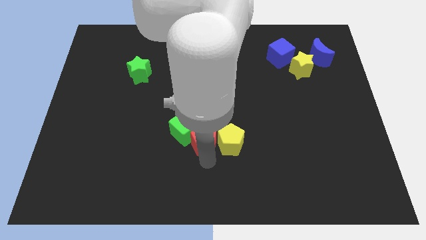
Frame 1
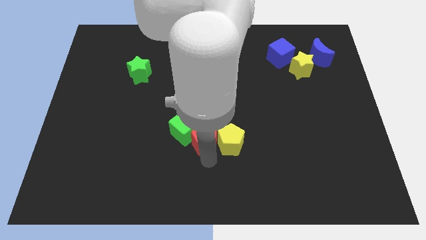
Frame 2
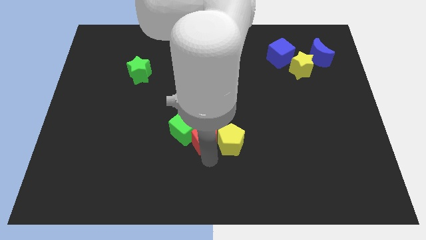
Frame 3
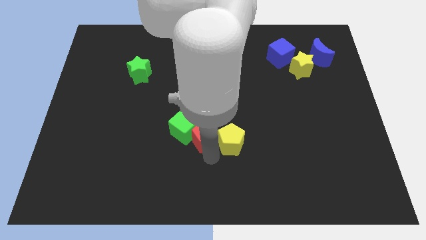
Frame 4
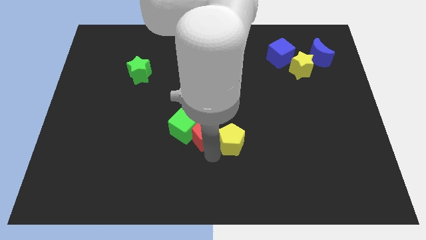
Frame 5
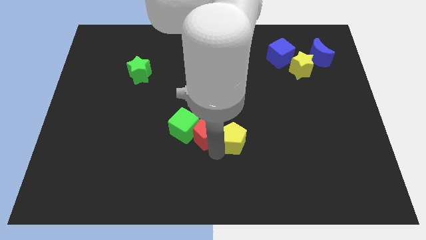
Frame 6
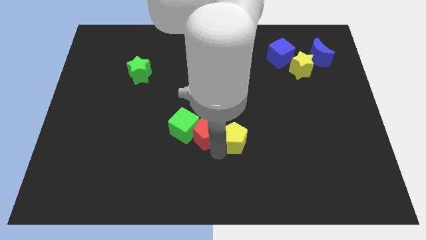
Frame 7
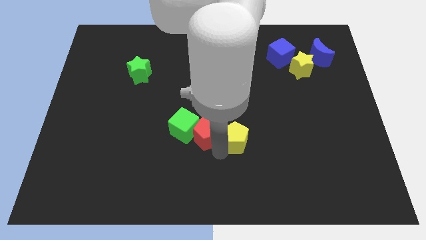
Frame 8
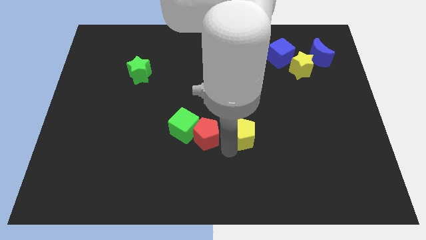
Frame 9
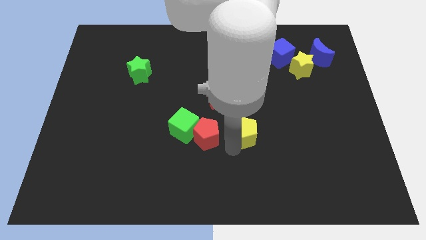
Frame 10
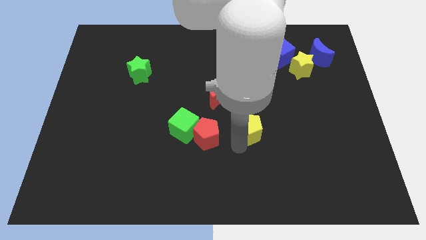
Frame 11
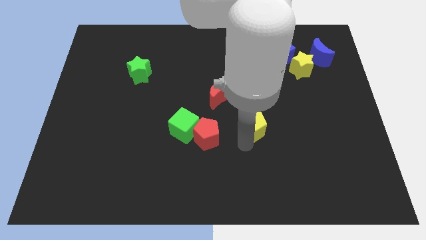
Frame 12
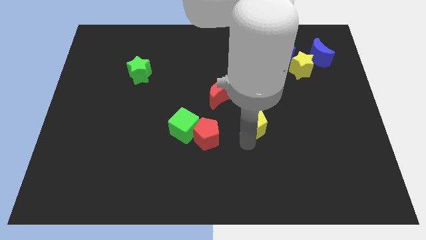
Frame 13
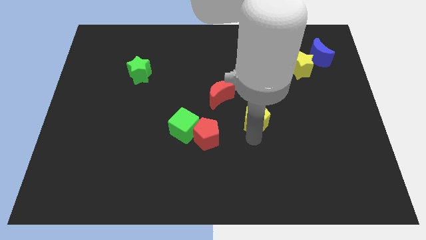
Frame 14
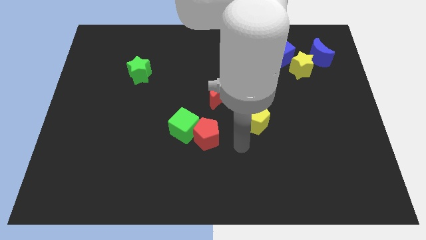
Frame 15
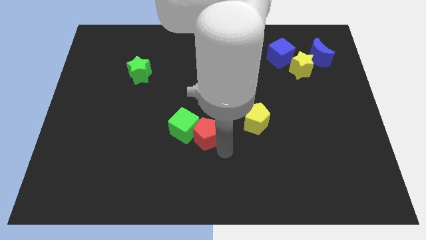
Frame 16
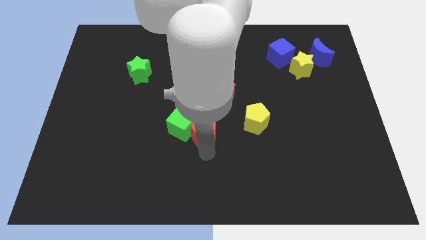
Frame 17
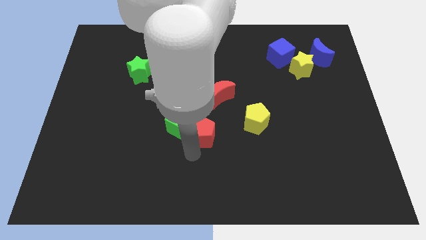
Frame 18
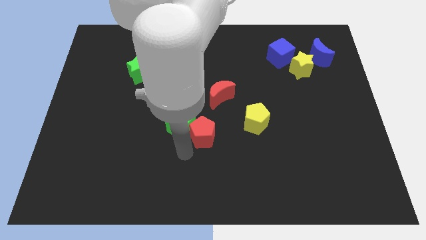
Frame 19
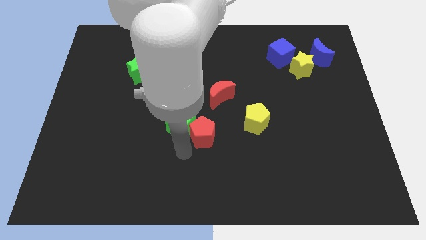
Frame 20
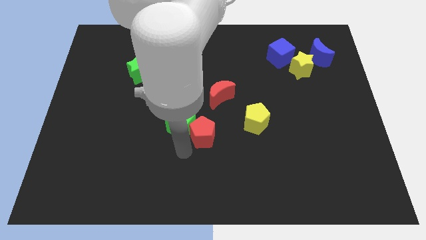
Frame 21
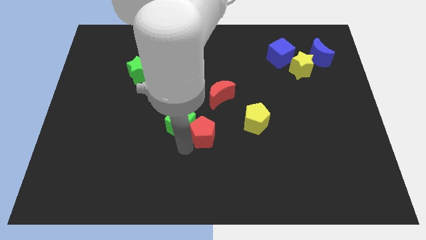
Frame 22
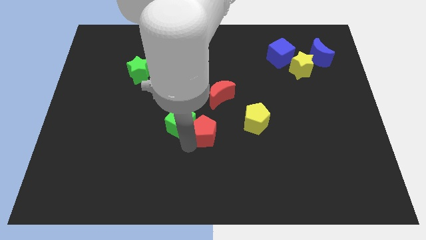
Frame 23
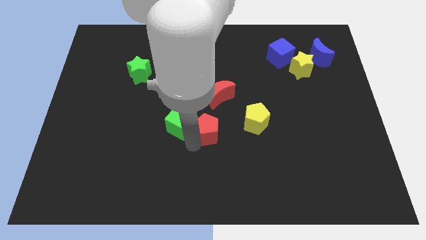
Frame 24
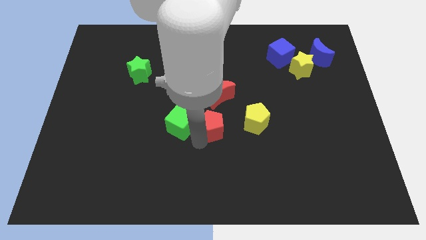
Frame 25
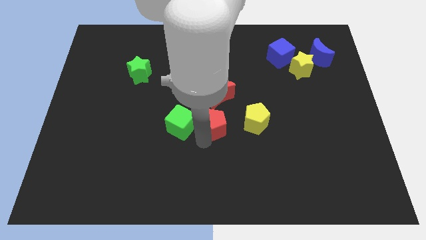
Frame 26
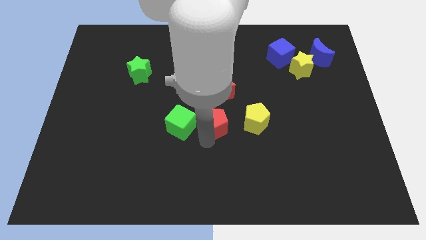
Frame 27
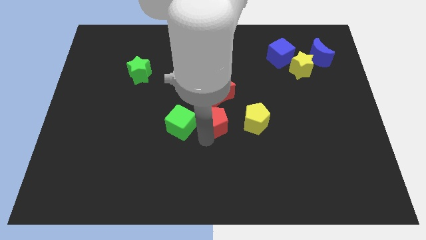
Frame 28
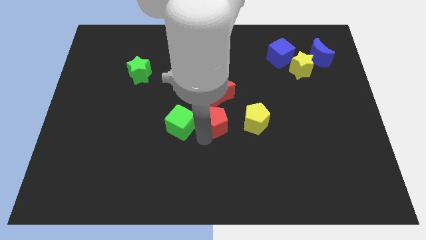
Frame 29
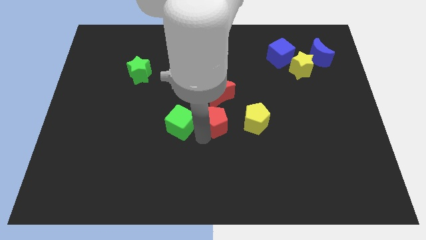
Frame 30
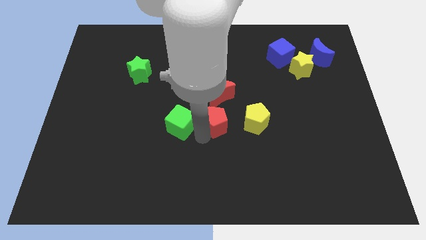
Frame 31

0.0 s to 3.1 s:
place the red pentagon to the bottom of the red moon

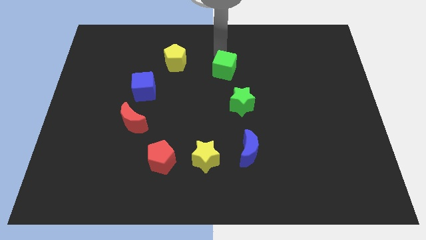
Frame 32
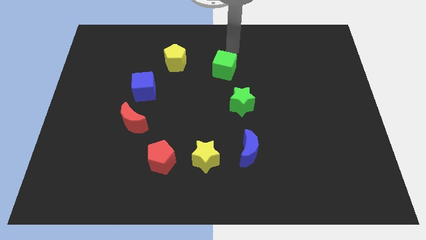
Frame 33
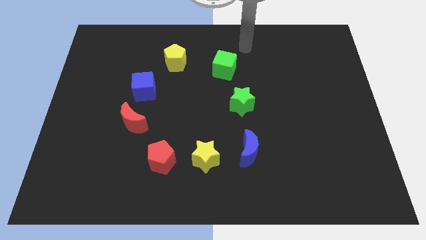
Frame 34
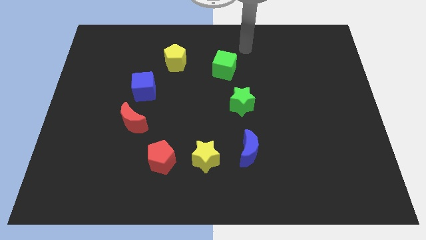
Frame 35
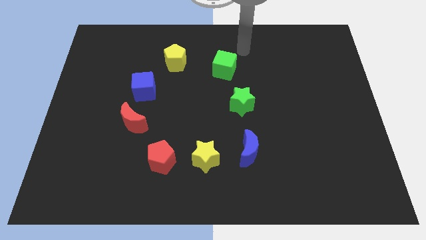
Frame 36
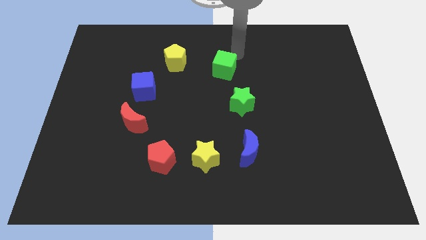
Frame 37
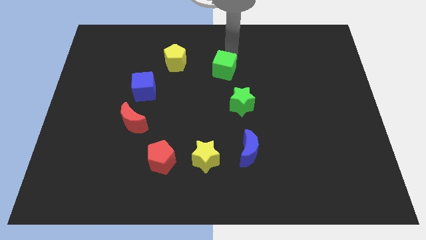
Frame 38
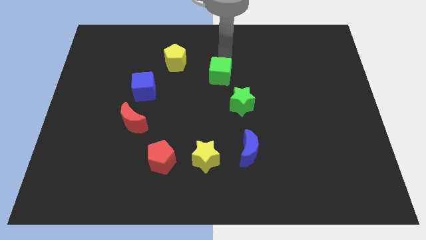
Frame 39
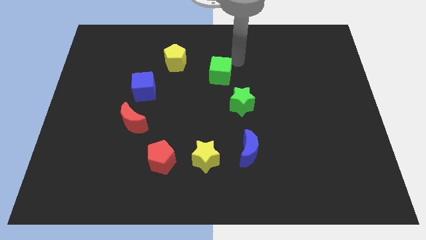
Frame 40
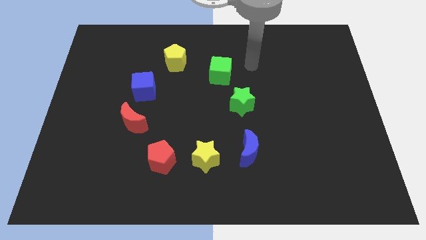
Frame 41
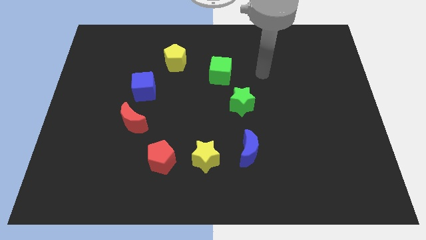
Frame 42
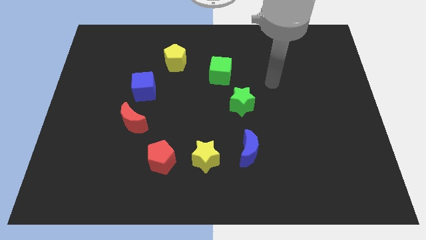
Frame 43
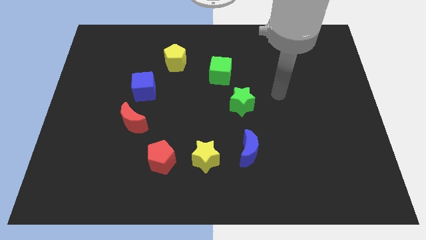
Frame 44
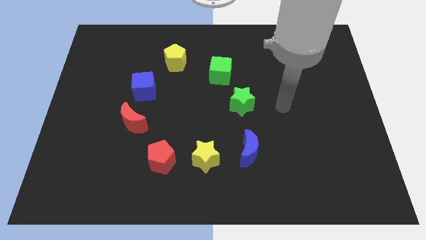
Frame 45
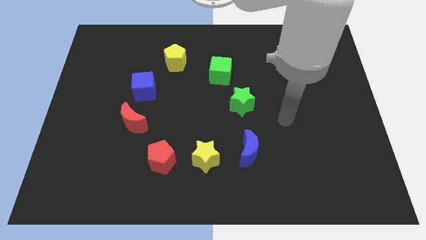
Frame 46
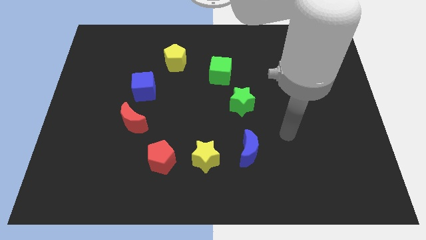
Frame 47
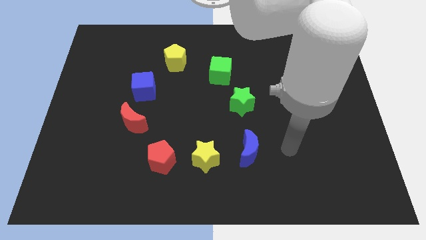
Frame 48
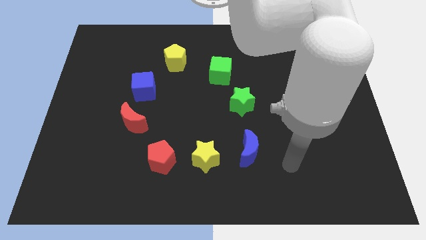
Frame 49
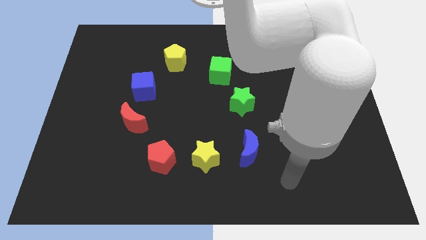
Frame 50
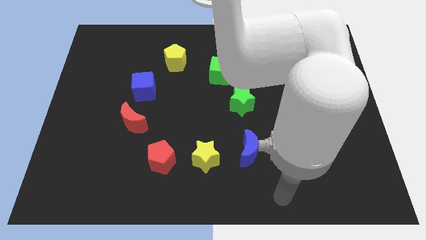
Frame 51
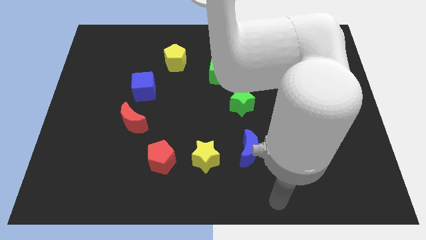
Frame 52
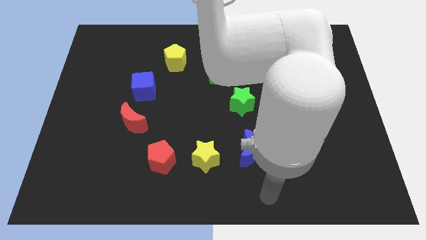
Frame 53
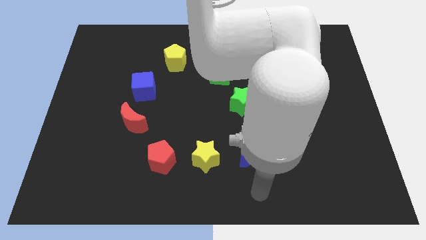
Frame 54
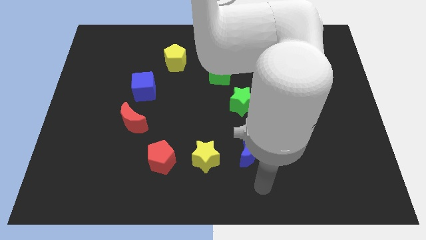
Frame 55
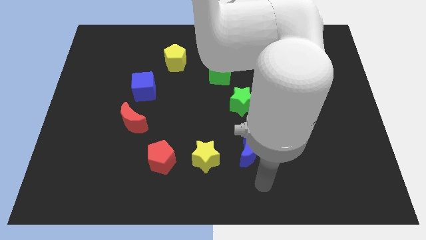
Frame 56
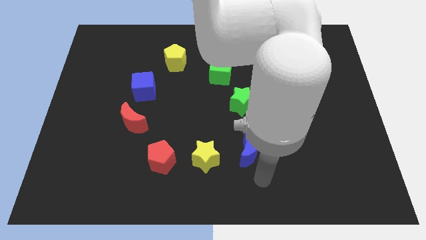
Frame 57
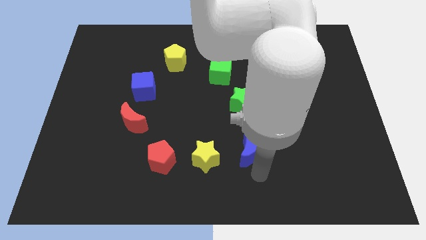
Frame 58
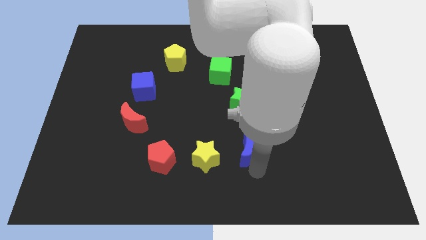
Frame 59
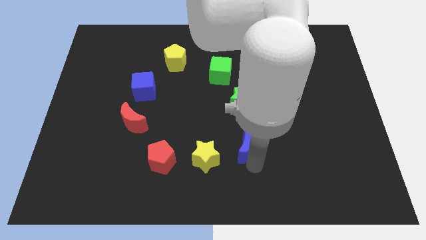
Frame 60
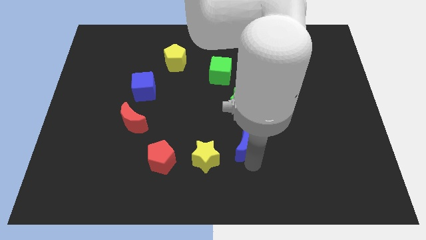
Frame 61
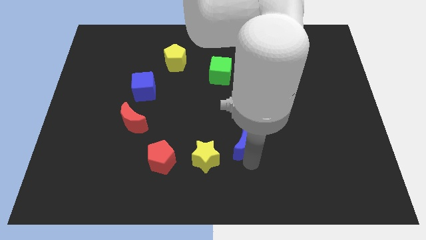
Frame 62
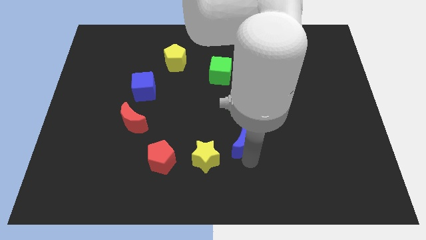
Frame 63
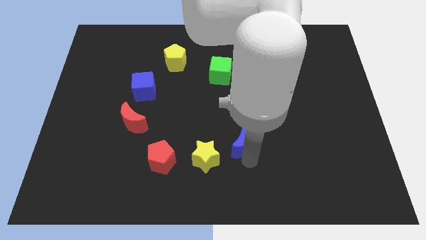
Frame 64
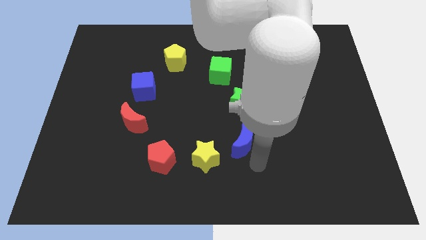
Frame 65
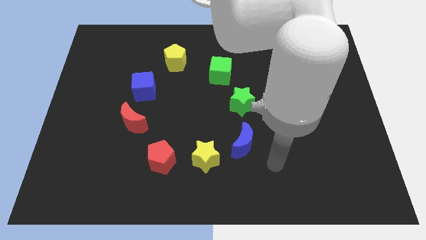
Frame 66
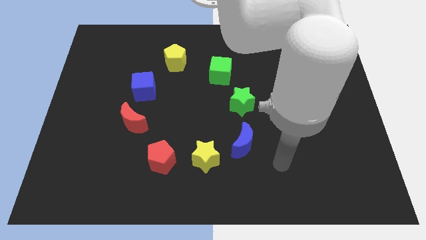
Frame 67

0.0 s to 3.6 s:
slightly push the blue moon upward

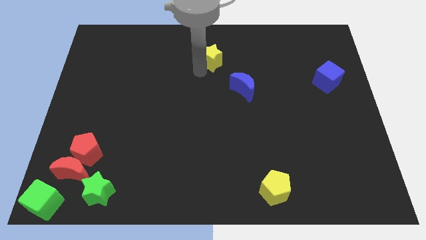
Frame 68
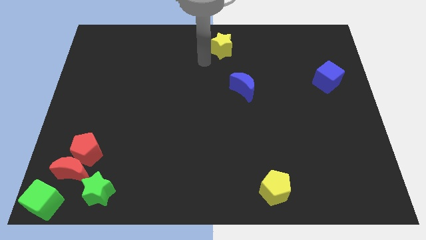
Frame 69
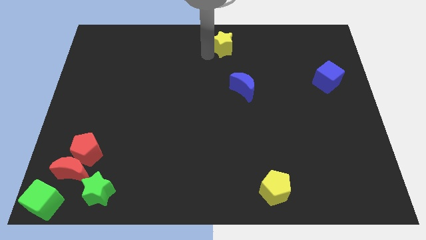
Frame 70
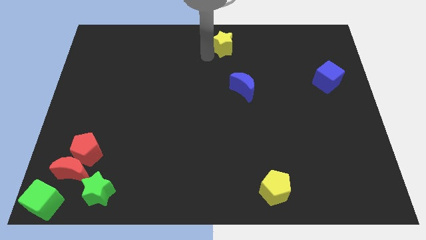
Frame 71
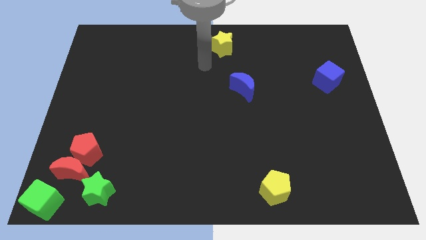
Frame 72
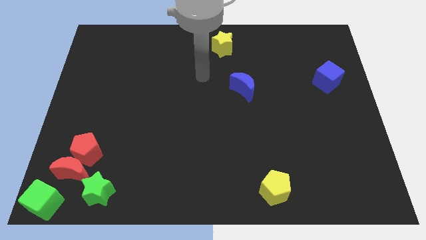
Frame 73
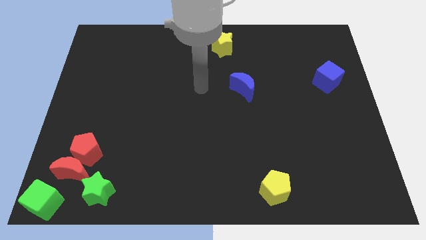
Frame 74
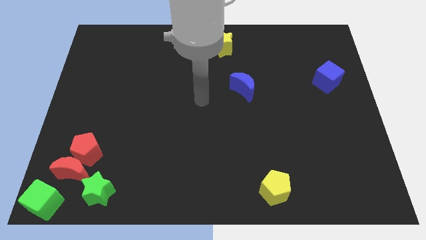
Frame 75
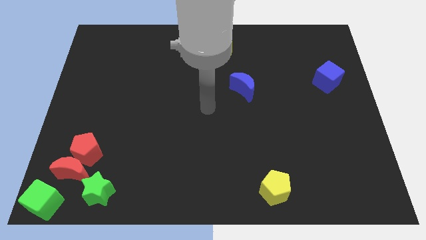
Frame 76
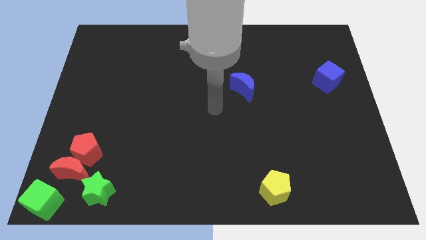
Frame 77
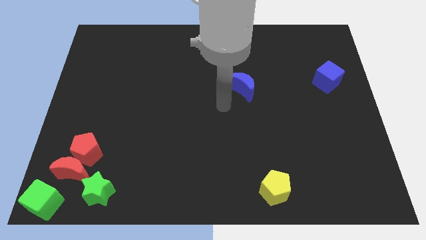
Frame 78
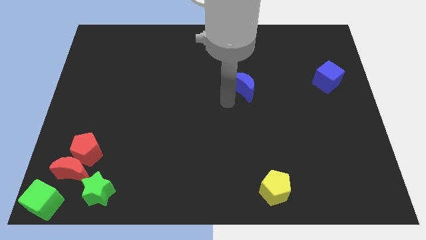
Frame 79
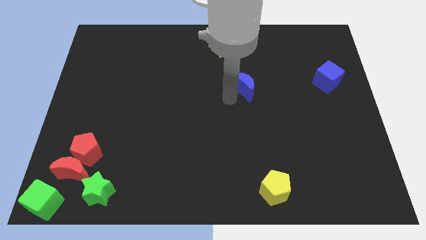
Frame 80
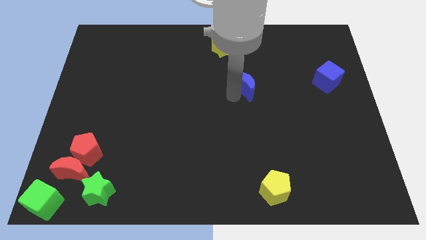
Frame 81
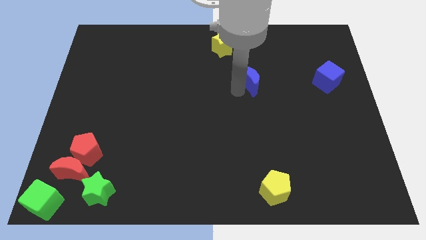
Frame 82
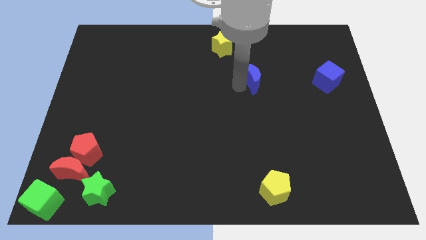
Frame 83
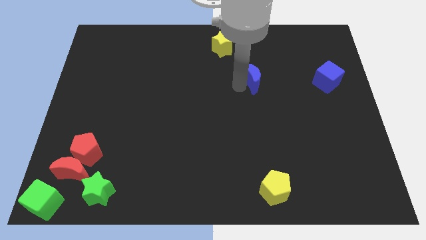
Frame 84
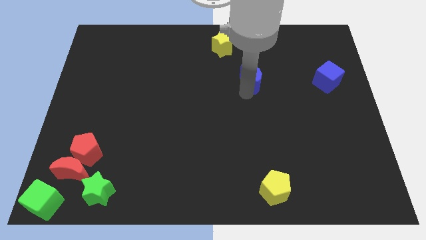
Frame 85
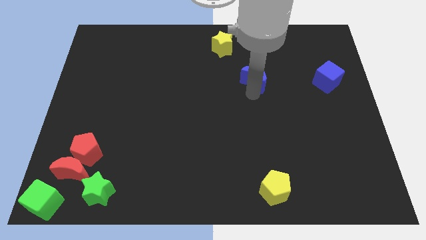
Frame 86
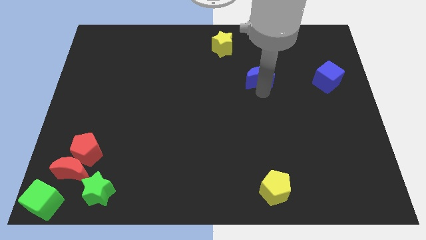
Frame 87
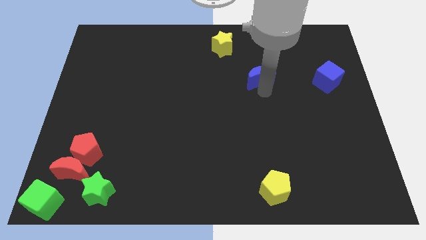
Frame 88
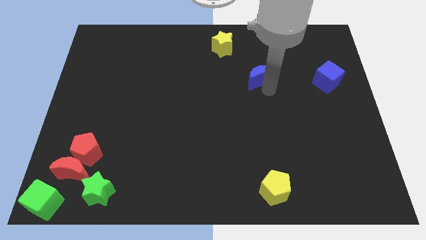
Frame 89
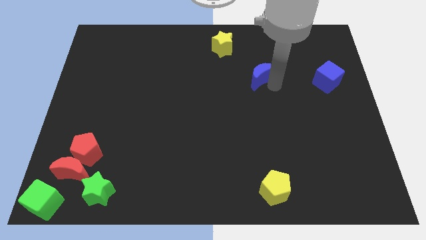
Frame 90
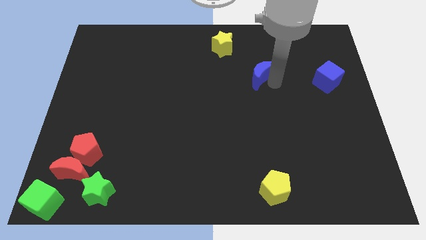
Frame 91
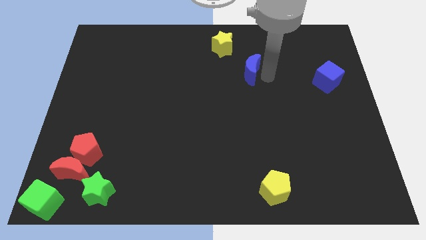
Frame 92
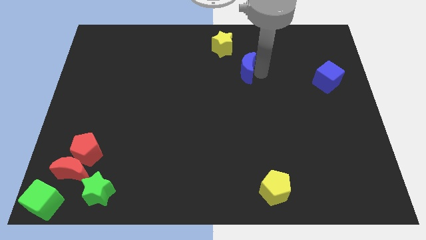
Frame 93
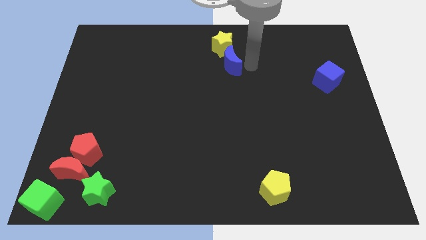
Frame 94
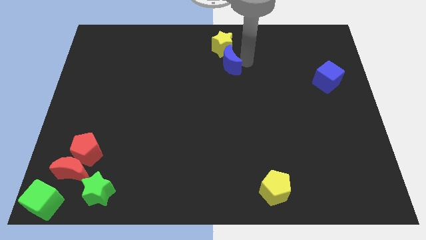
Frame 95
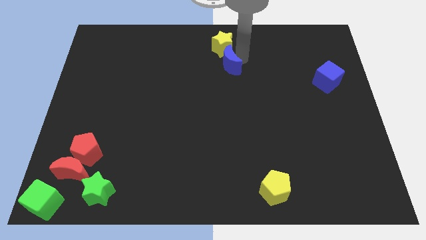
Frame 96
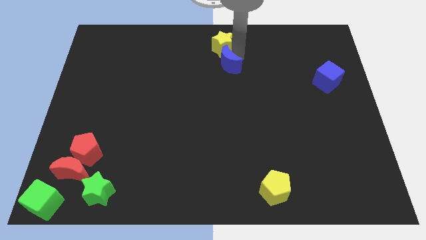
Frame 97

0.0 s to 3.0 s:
place blue moon below yellow star
